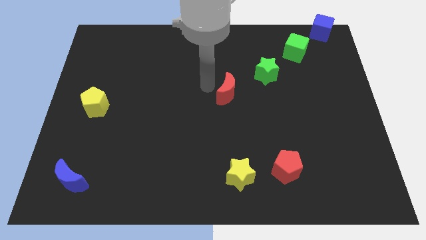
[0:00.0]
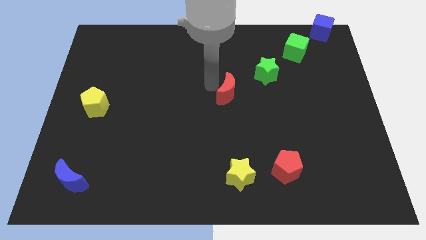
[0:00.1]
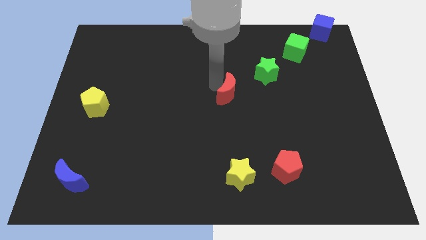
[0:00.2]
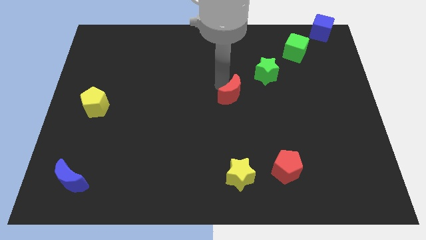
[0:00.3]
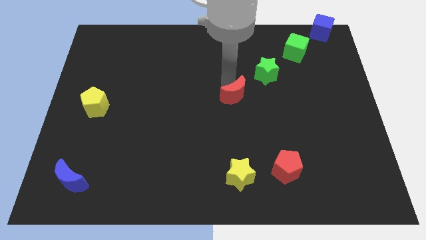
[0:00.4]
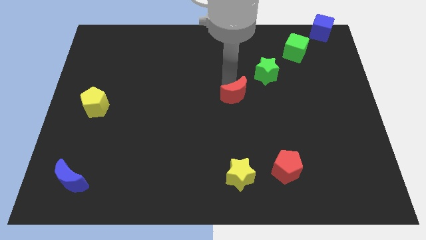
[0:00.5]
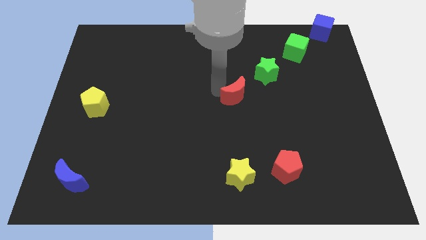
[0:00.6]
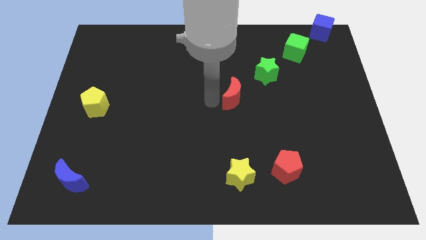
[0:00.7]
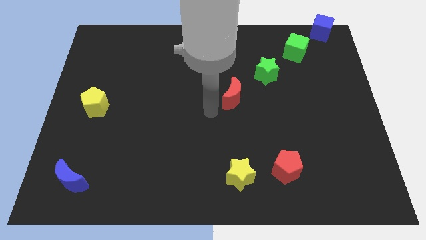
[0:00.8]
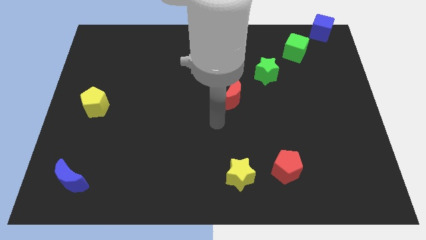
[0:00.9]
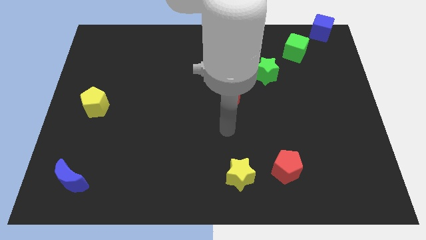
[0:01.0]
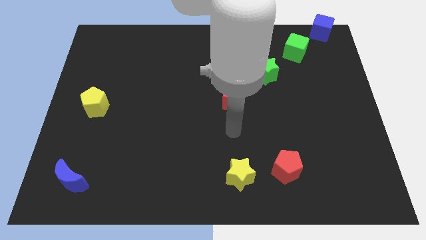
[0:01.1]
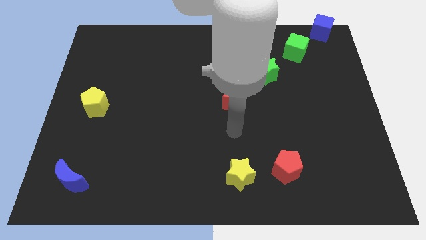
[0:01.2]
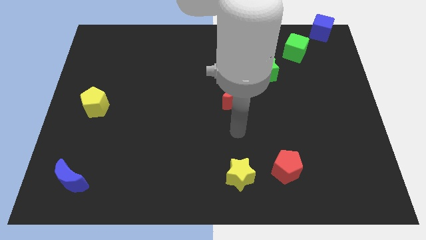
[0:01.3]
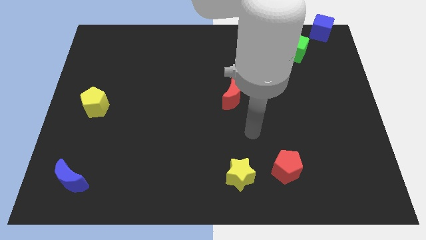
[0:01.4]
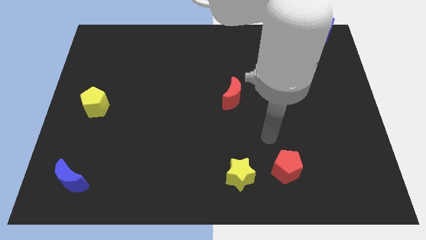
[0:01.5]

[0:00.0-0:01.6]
adjust the red crescent diagonally to the green star

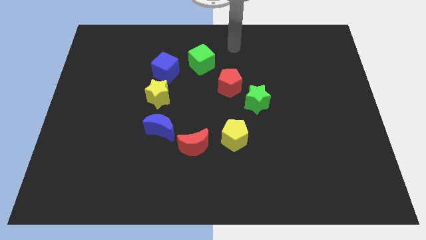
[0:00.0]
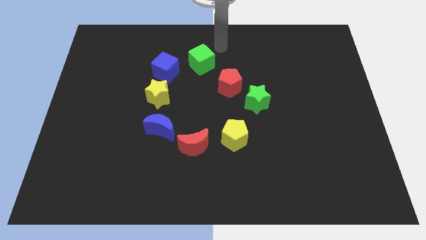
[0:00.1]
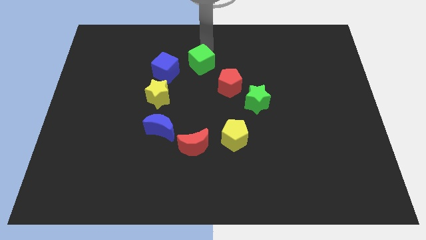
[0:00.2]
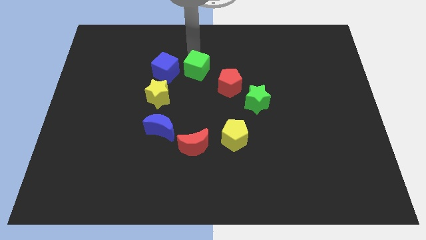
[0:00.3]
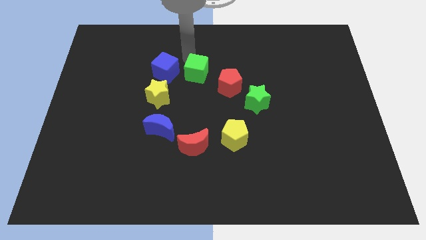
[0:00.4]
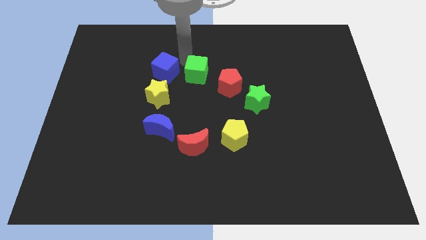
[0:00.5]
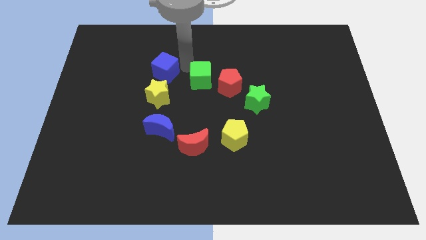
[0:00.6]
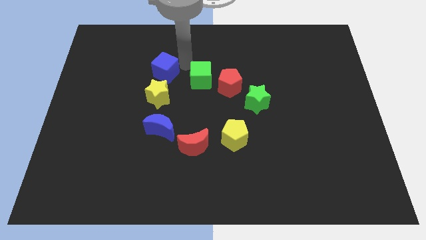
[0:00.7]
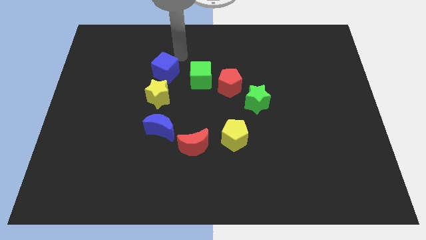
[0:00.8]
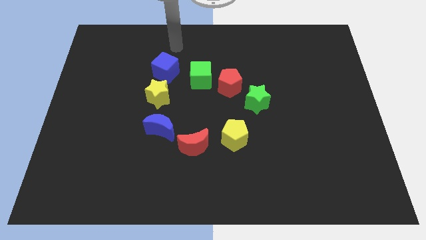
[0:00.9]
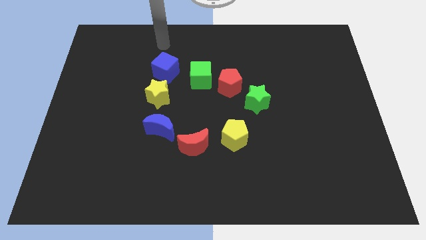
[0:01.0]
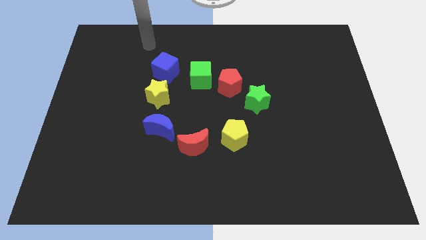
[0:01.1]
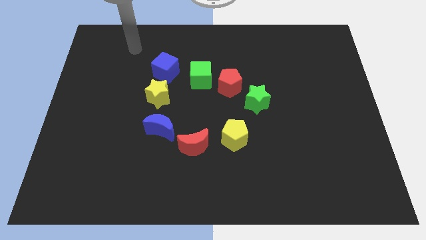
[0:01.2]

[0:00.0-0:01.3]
move the green cube left to the red pentagon

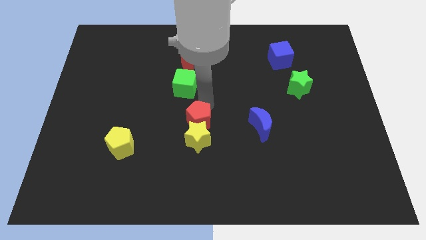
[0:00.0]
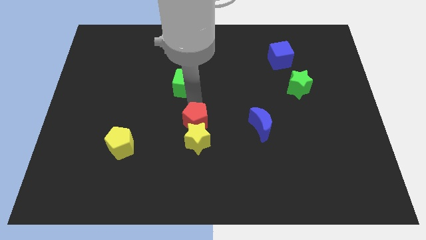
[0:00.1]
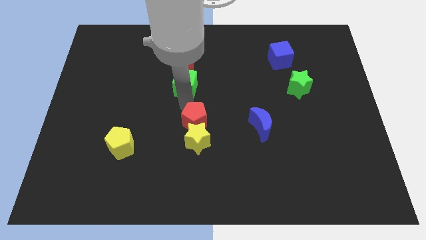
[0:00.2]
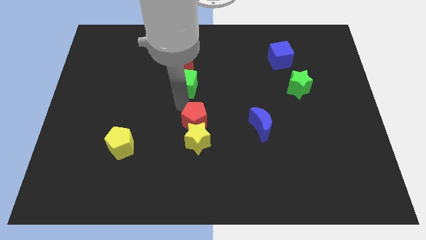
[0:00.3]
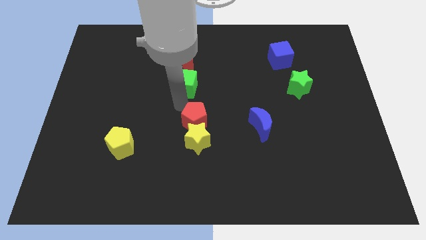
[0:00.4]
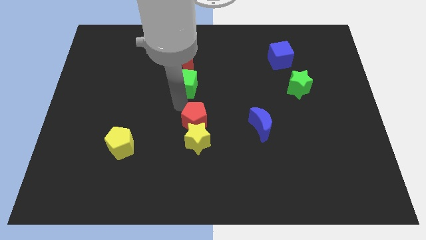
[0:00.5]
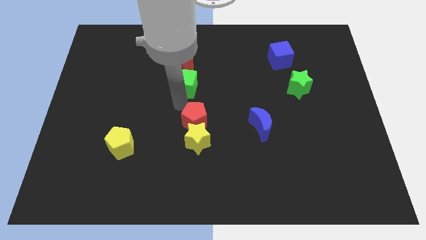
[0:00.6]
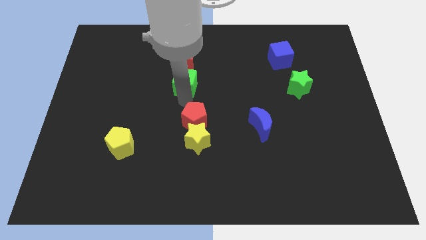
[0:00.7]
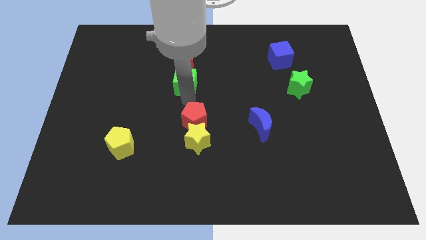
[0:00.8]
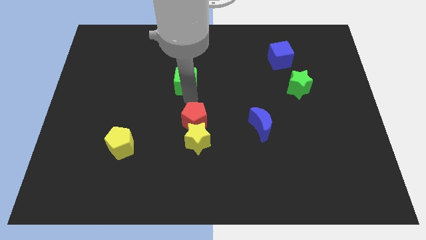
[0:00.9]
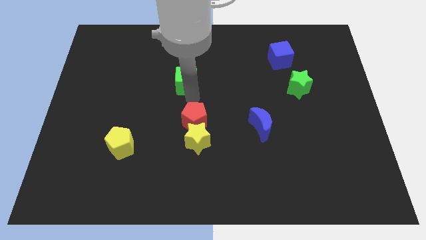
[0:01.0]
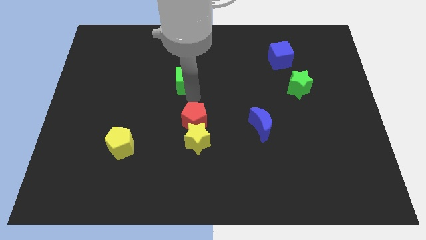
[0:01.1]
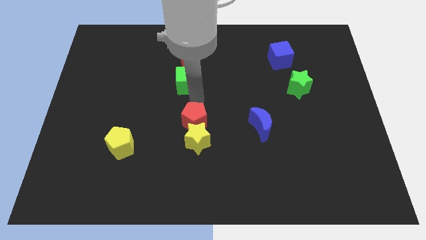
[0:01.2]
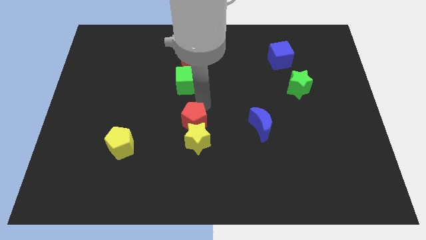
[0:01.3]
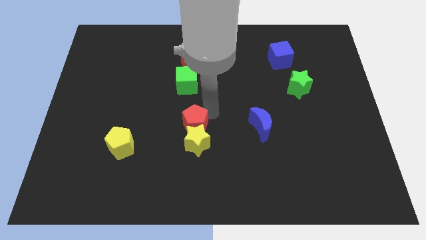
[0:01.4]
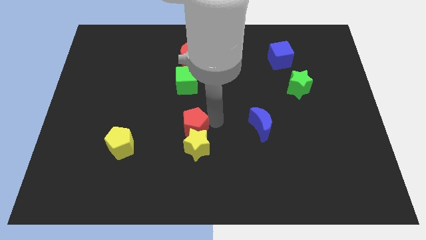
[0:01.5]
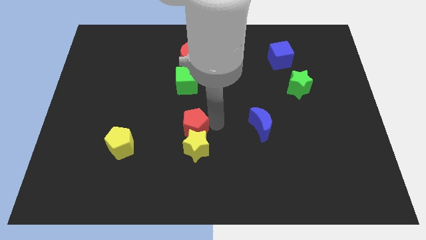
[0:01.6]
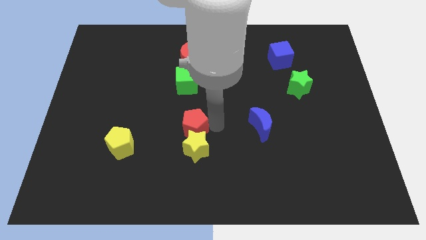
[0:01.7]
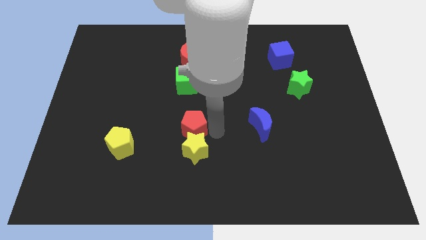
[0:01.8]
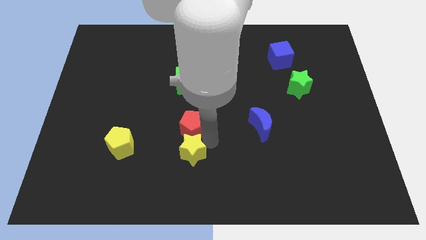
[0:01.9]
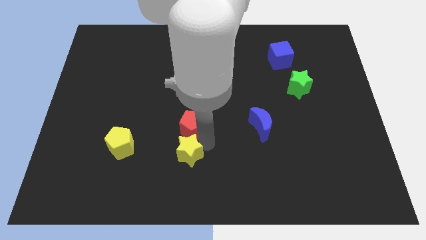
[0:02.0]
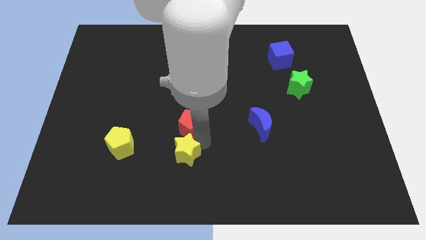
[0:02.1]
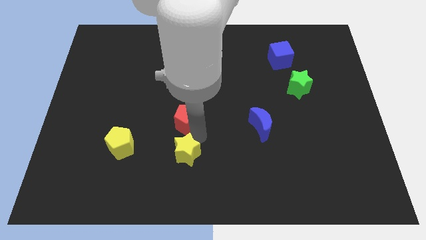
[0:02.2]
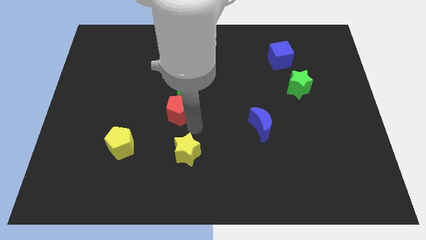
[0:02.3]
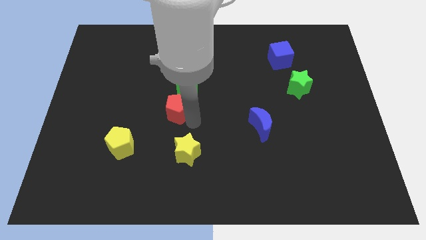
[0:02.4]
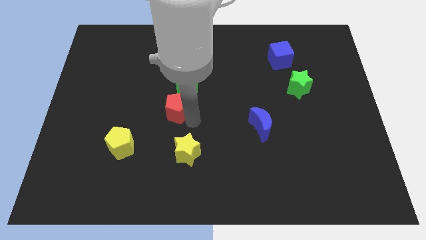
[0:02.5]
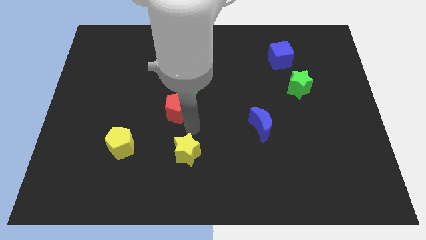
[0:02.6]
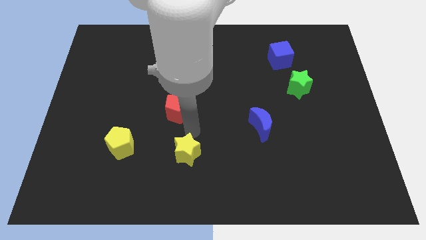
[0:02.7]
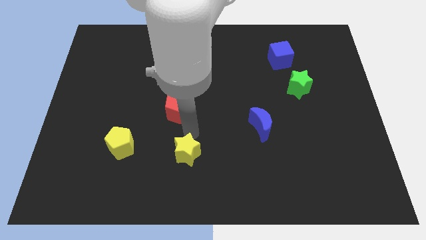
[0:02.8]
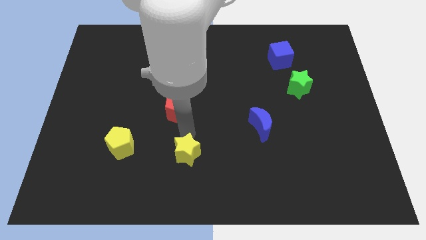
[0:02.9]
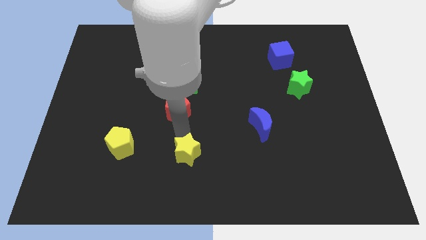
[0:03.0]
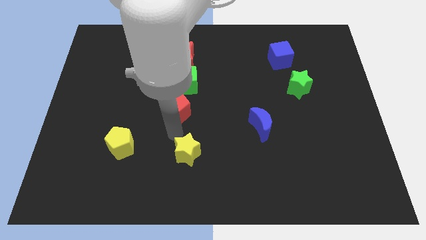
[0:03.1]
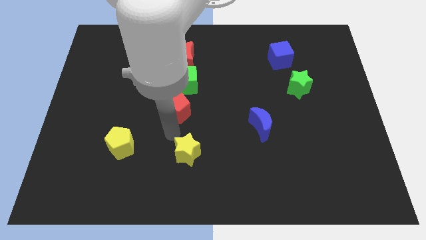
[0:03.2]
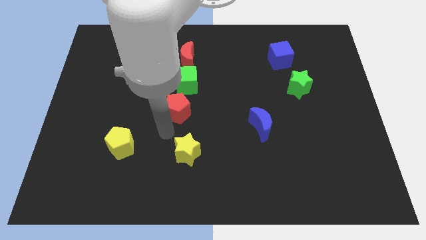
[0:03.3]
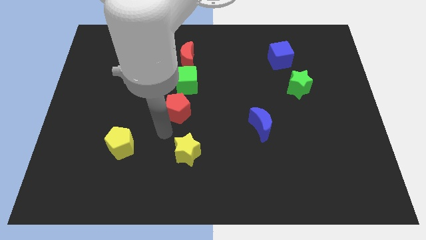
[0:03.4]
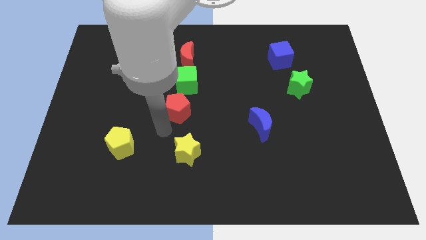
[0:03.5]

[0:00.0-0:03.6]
separate the red pentagon and yellow star

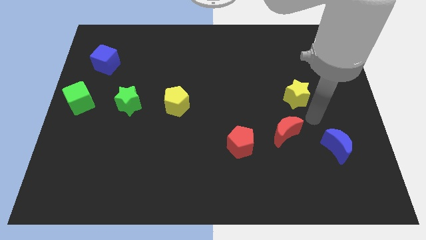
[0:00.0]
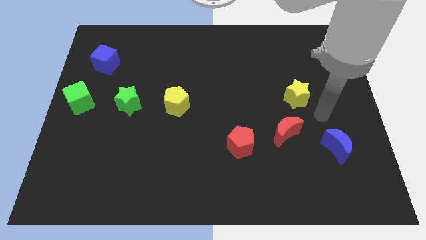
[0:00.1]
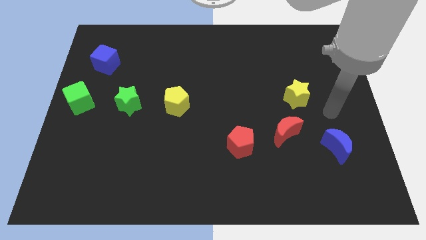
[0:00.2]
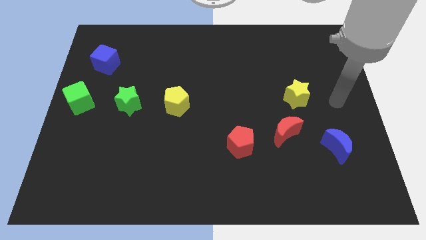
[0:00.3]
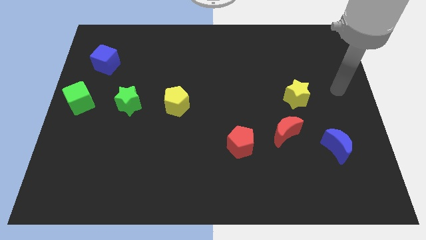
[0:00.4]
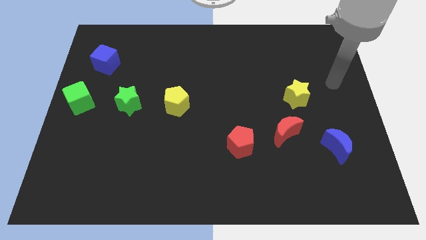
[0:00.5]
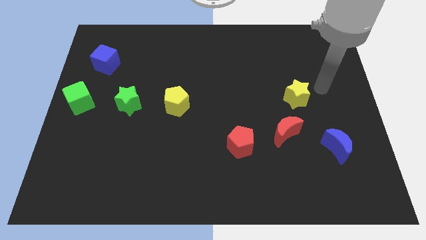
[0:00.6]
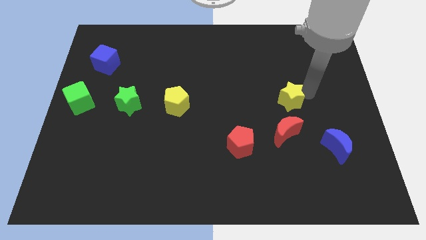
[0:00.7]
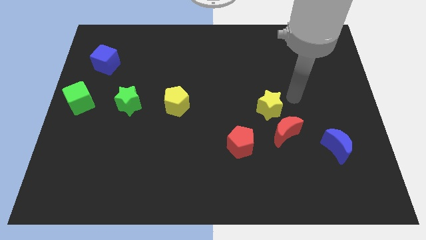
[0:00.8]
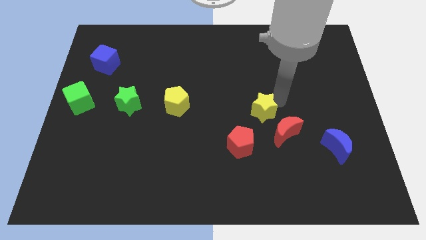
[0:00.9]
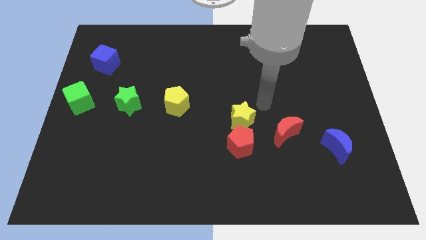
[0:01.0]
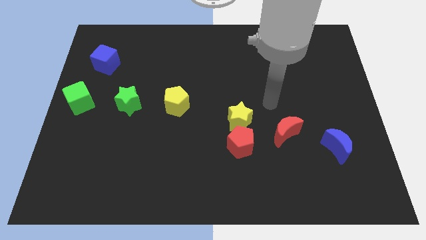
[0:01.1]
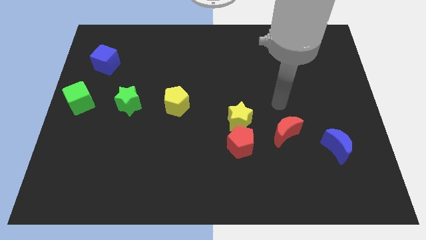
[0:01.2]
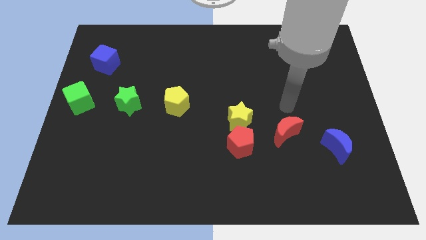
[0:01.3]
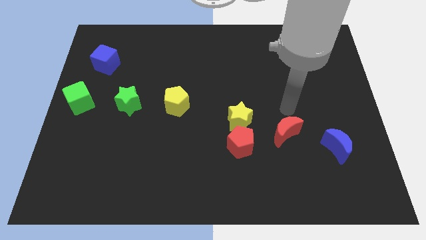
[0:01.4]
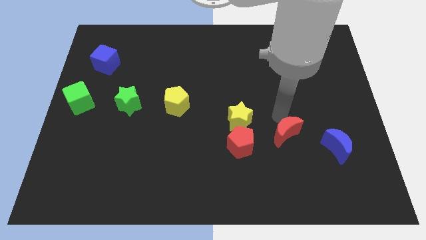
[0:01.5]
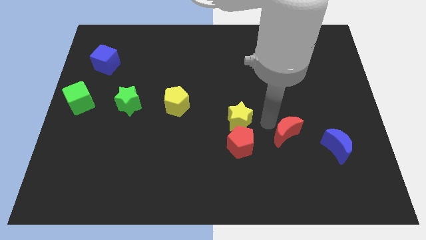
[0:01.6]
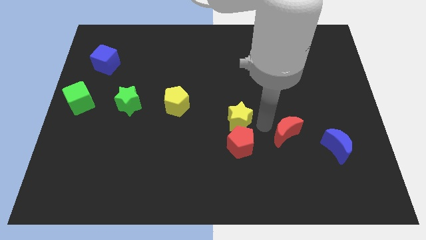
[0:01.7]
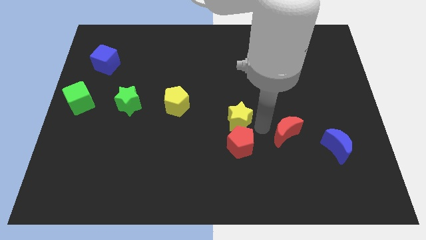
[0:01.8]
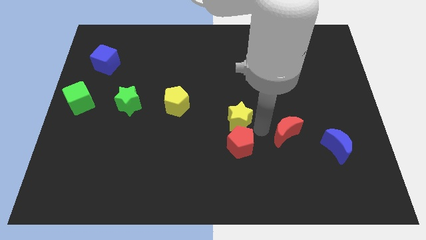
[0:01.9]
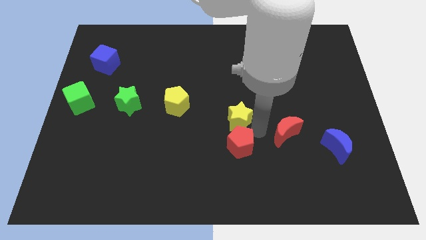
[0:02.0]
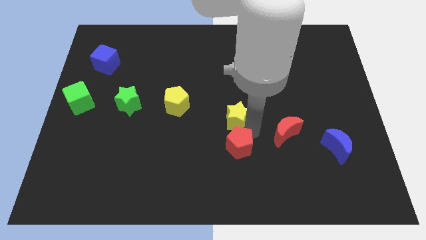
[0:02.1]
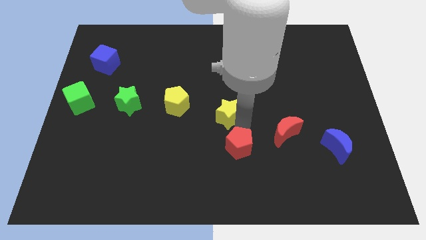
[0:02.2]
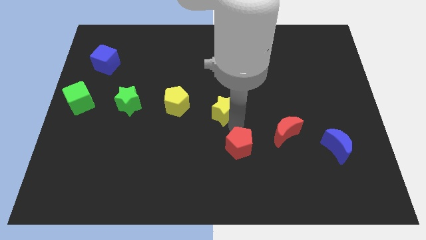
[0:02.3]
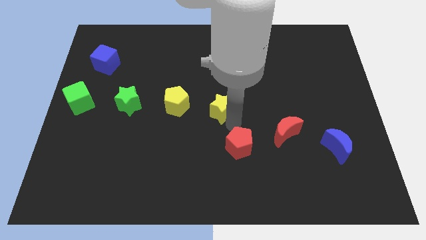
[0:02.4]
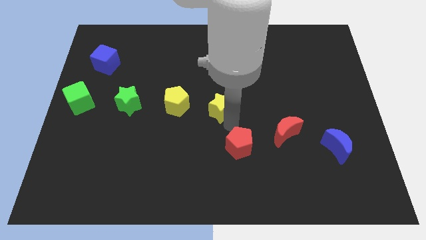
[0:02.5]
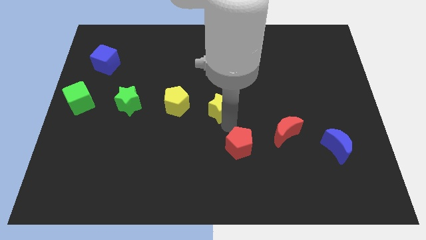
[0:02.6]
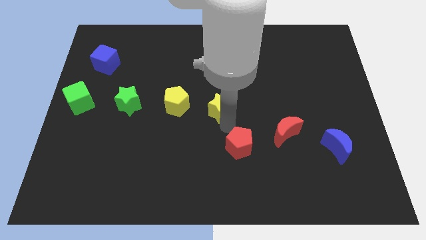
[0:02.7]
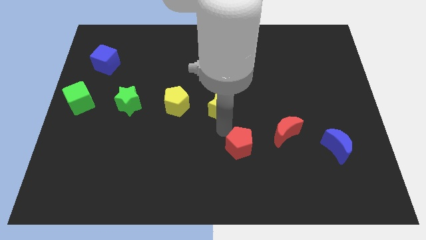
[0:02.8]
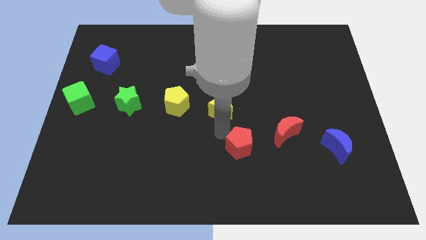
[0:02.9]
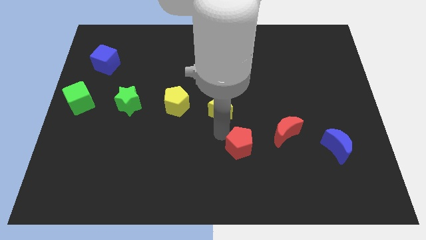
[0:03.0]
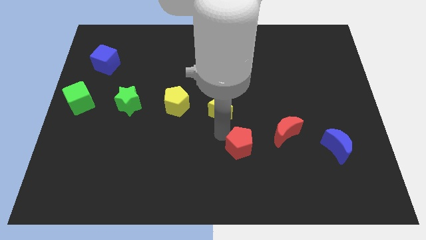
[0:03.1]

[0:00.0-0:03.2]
push the yellow star to the right of the yellow pentagon
